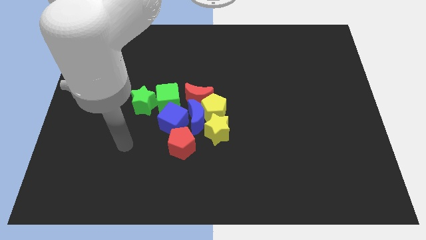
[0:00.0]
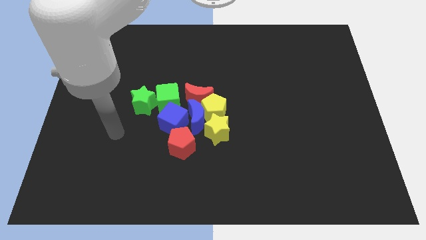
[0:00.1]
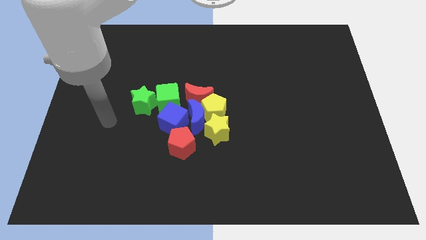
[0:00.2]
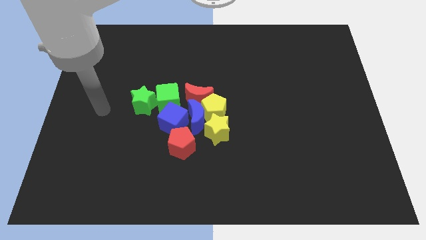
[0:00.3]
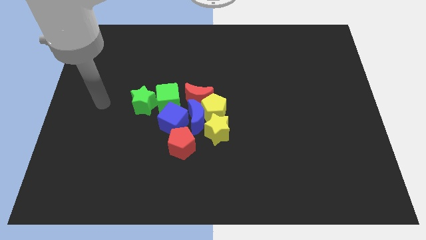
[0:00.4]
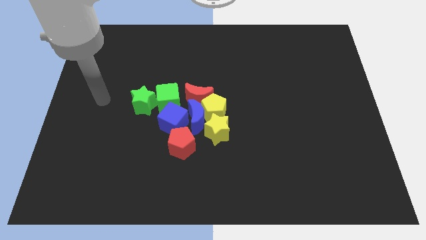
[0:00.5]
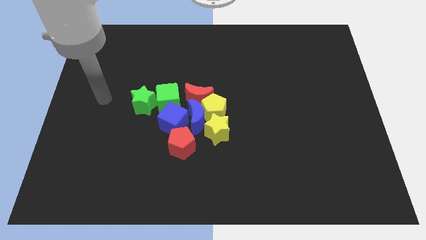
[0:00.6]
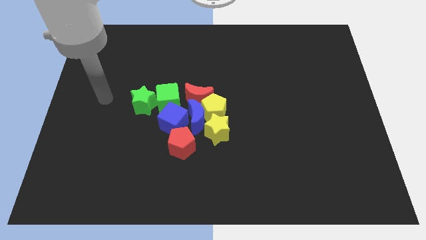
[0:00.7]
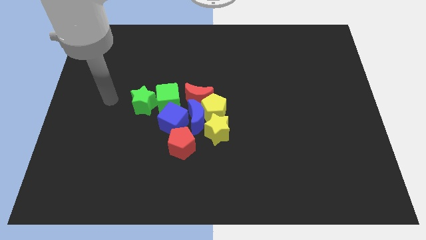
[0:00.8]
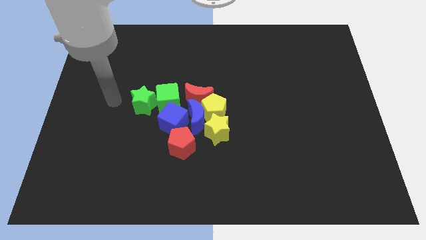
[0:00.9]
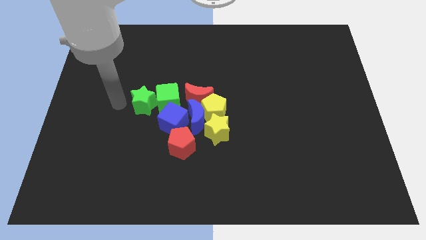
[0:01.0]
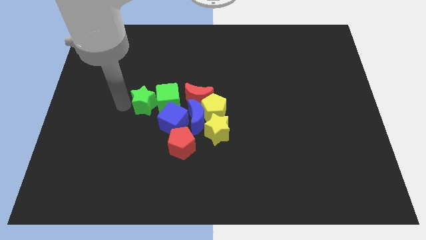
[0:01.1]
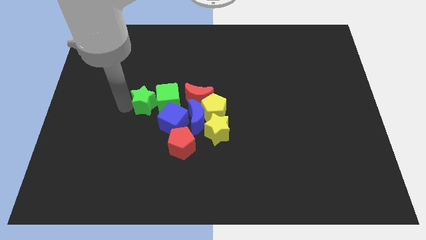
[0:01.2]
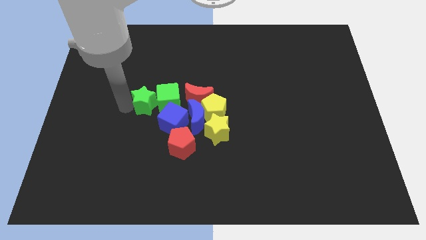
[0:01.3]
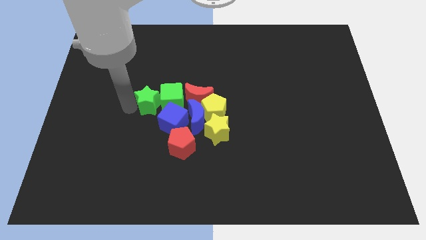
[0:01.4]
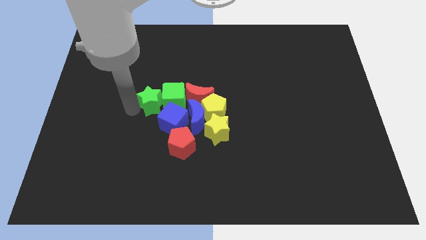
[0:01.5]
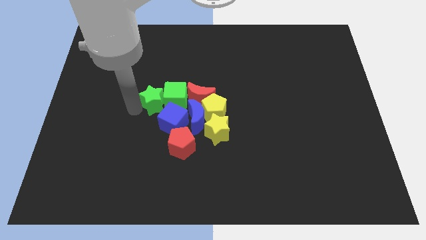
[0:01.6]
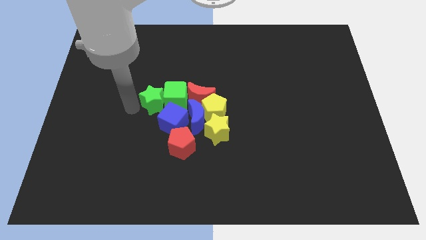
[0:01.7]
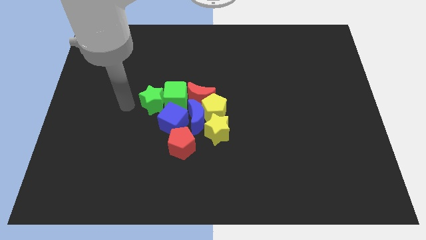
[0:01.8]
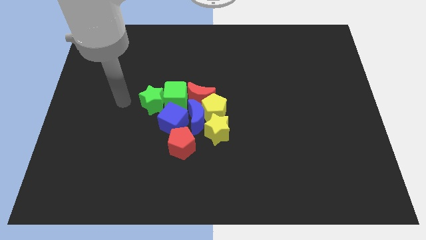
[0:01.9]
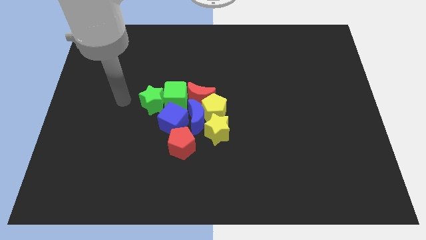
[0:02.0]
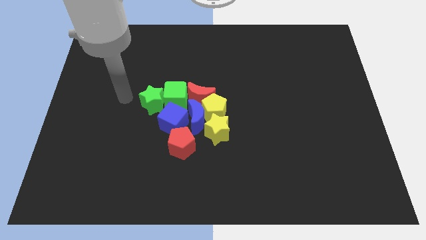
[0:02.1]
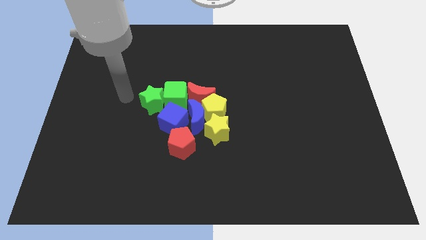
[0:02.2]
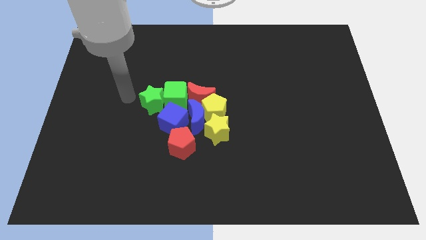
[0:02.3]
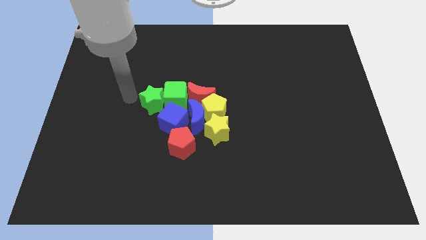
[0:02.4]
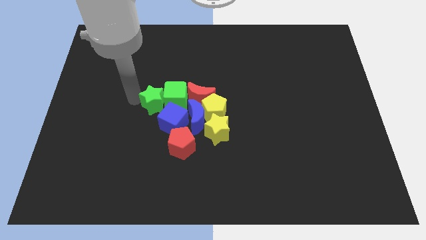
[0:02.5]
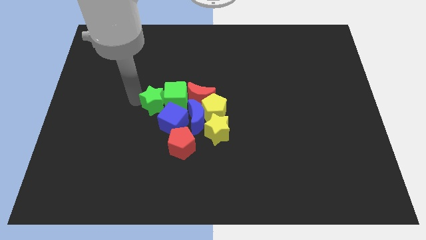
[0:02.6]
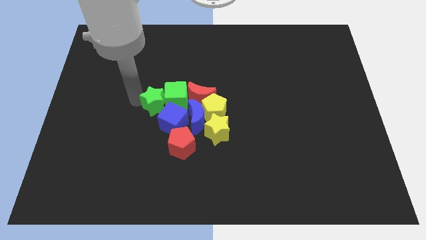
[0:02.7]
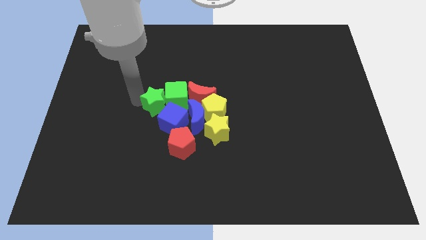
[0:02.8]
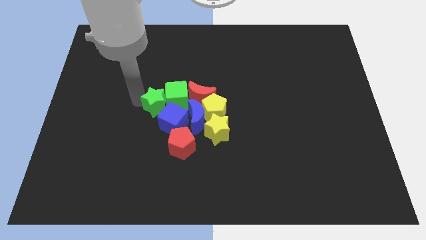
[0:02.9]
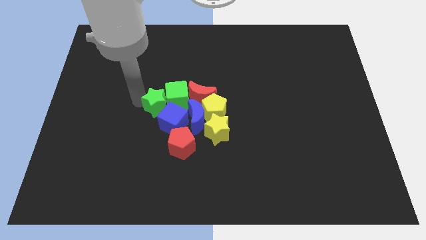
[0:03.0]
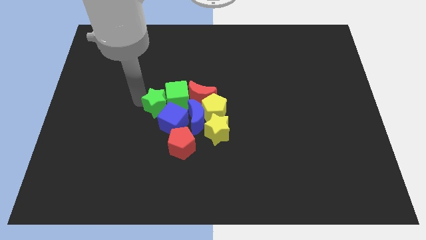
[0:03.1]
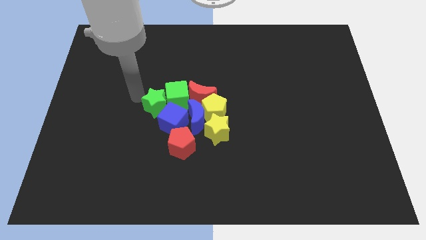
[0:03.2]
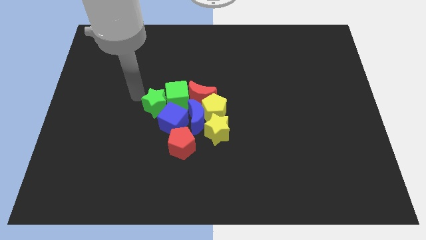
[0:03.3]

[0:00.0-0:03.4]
push green star into green cube

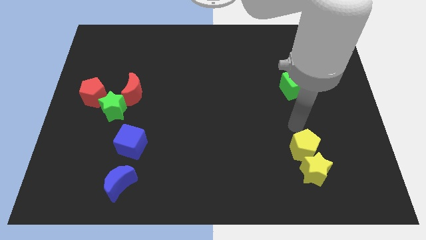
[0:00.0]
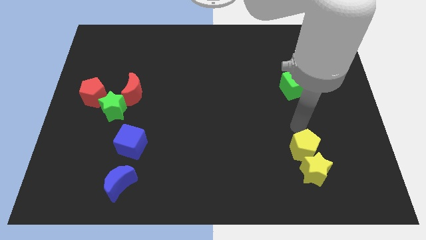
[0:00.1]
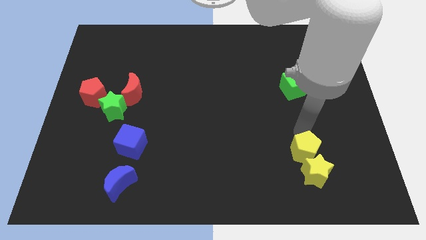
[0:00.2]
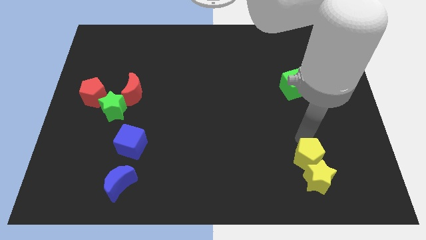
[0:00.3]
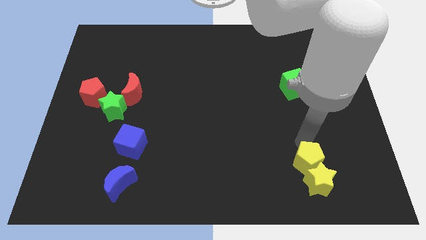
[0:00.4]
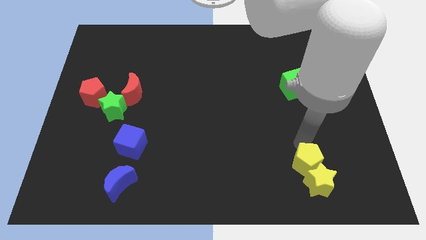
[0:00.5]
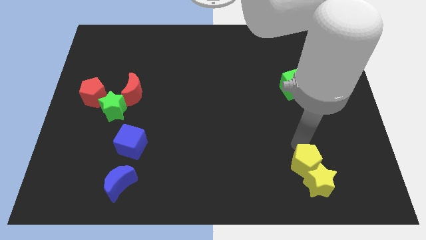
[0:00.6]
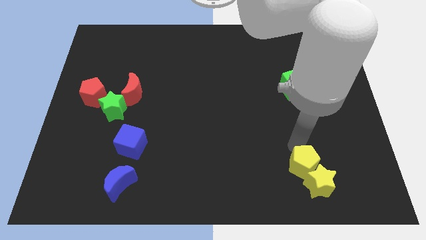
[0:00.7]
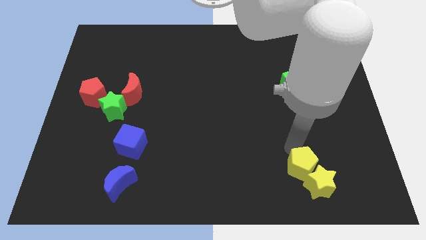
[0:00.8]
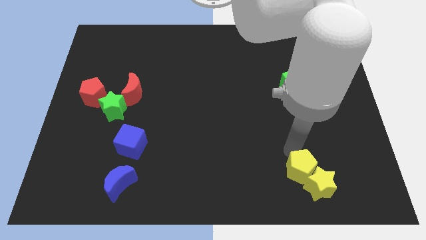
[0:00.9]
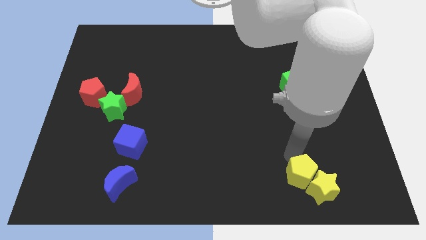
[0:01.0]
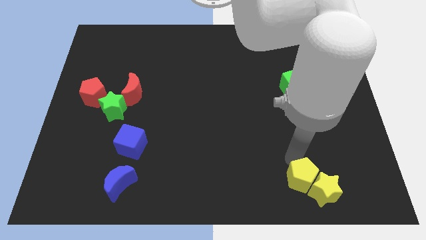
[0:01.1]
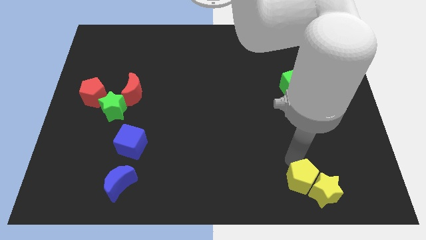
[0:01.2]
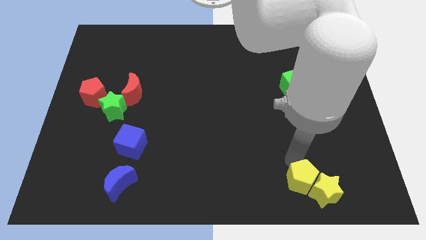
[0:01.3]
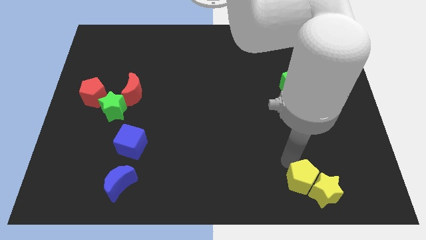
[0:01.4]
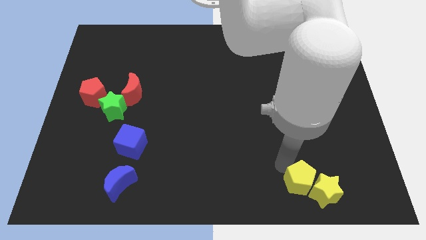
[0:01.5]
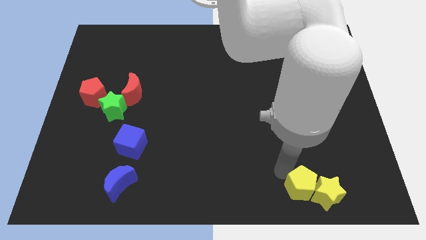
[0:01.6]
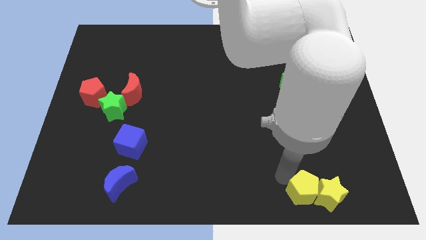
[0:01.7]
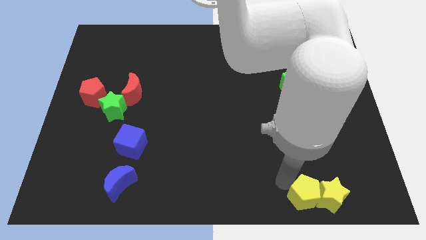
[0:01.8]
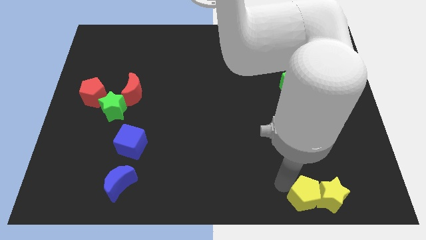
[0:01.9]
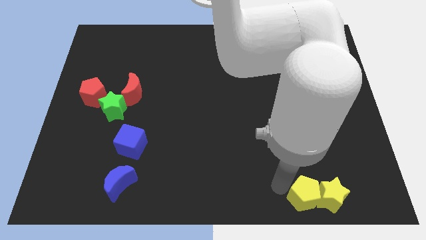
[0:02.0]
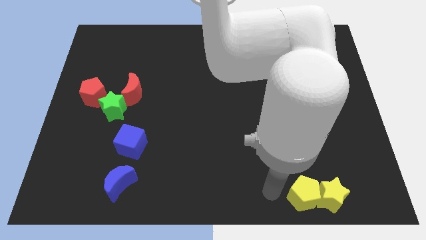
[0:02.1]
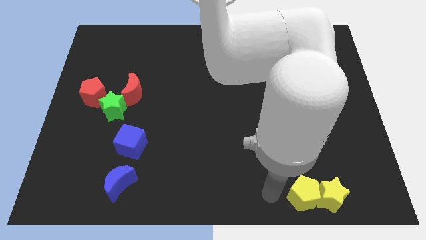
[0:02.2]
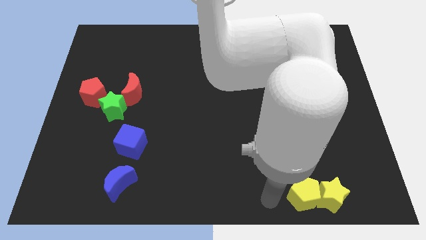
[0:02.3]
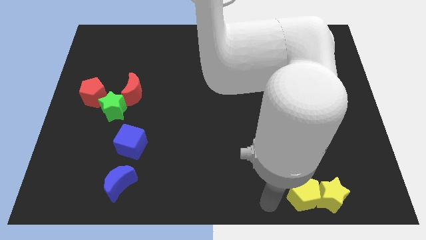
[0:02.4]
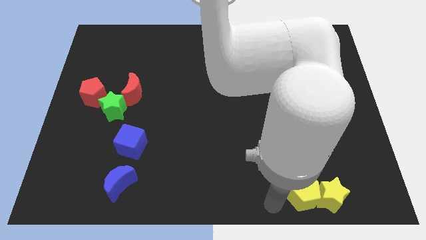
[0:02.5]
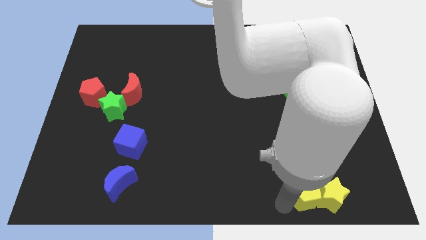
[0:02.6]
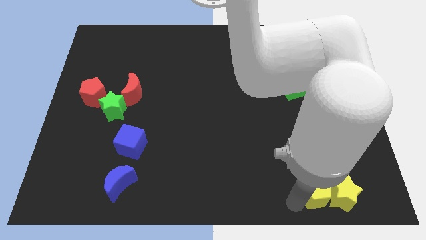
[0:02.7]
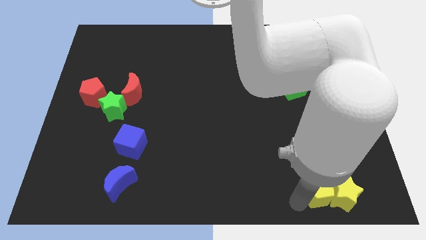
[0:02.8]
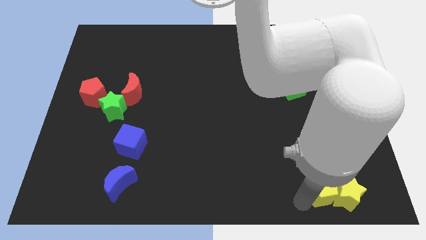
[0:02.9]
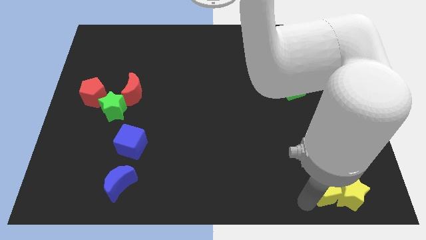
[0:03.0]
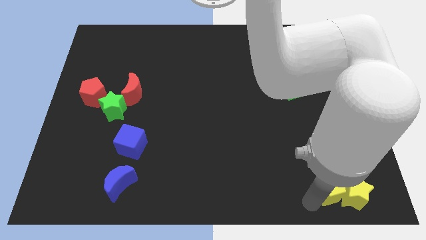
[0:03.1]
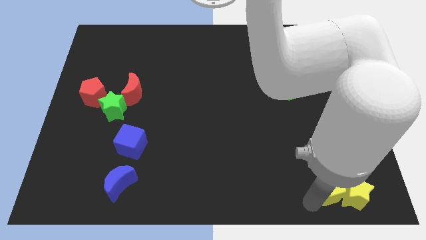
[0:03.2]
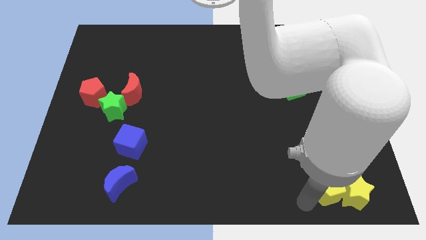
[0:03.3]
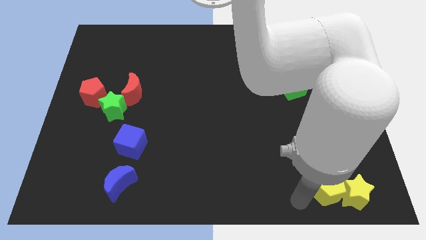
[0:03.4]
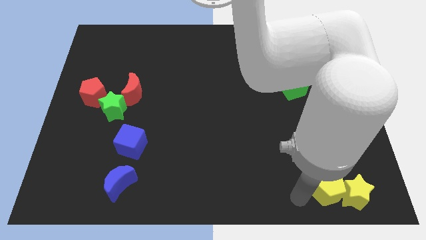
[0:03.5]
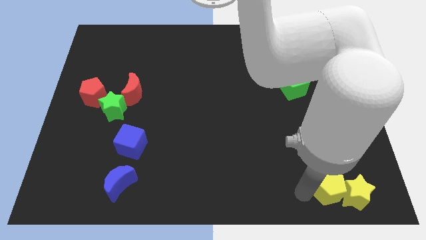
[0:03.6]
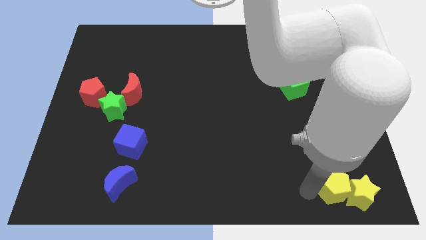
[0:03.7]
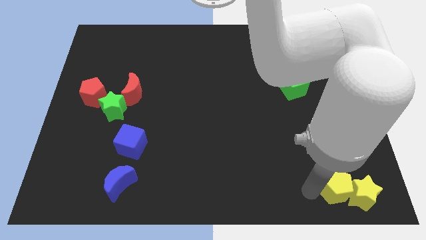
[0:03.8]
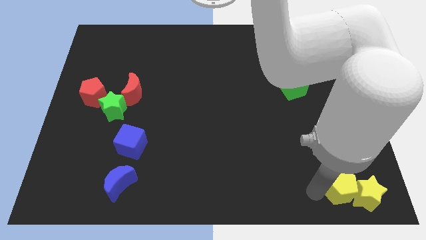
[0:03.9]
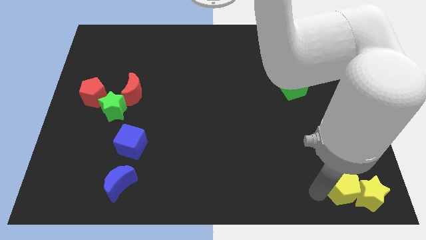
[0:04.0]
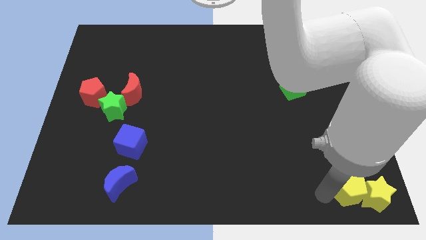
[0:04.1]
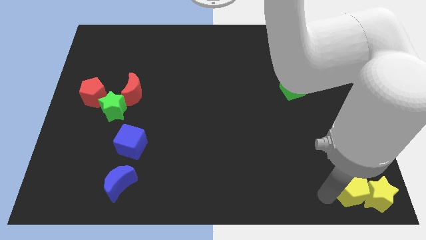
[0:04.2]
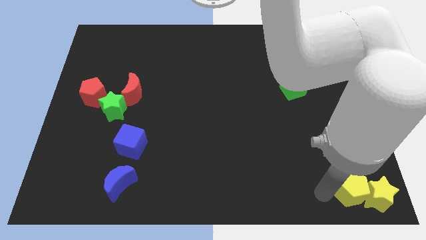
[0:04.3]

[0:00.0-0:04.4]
move the yellow penatgon into the yellow star to the bottom right corner of the board

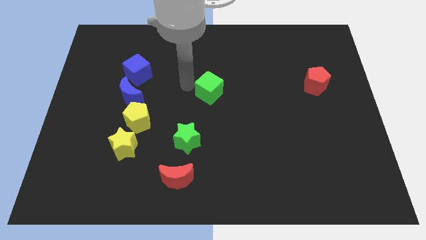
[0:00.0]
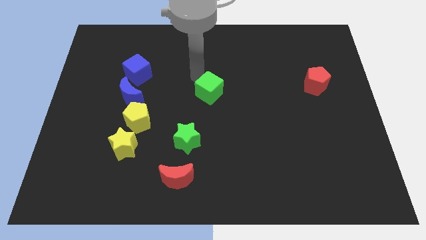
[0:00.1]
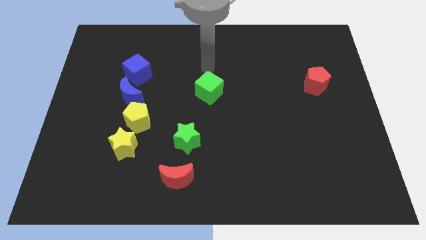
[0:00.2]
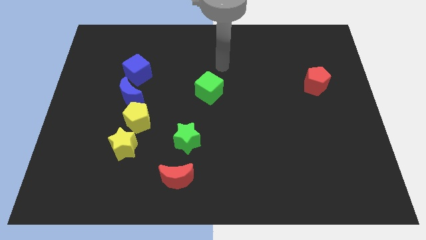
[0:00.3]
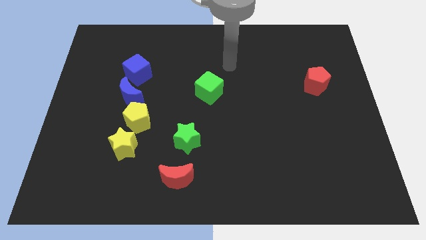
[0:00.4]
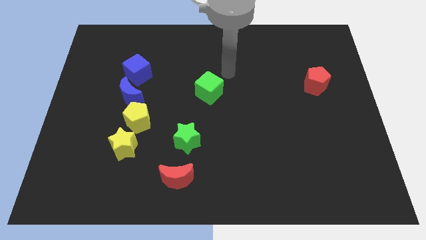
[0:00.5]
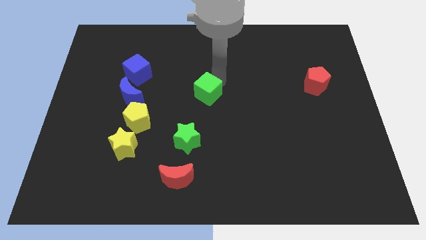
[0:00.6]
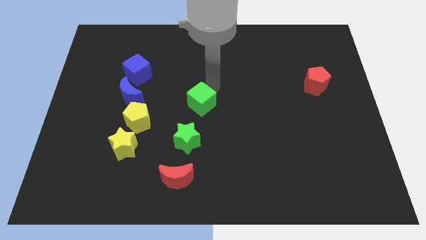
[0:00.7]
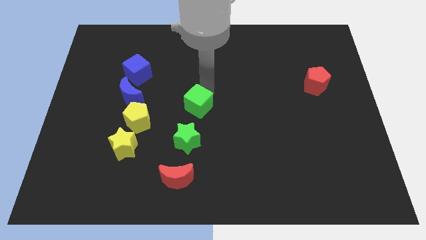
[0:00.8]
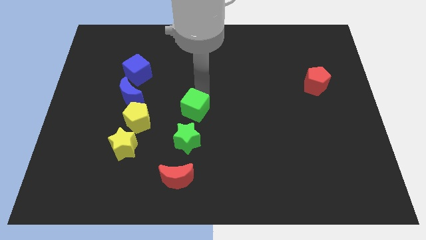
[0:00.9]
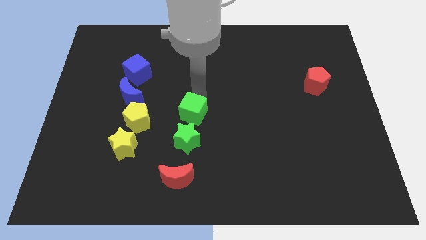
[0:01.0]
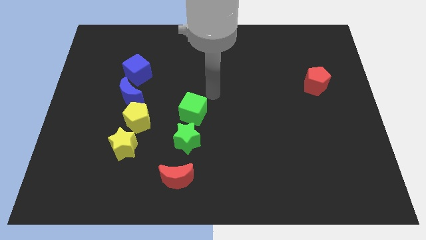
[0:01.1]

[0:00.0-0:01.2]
place the green cube above the green star
